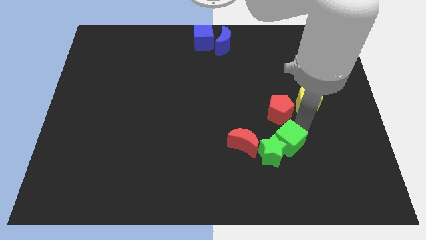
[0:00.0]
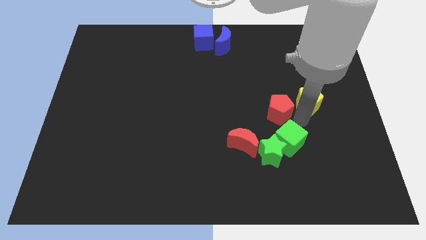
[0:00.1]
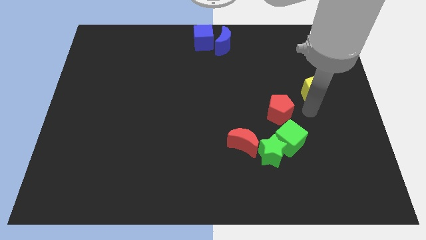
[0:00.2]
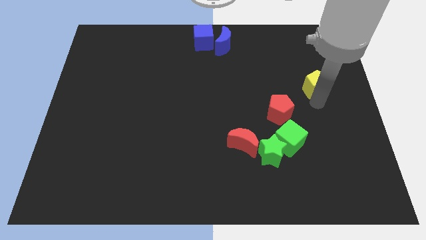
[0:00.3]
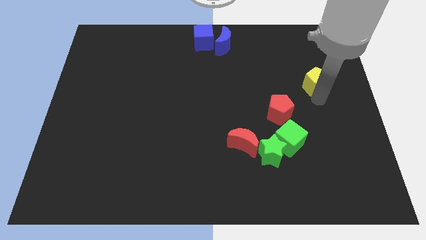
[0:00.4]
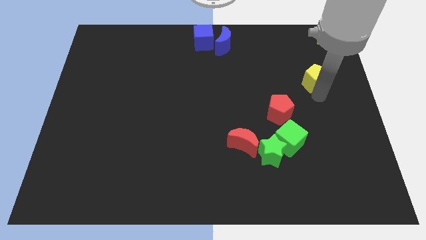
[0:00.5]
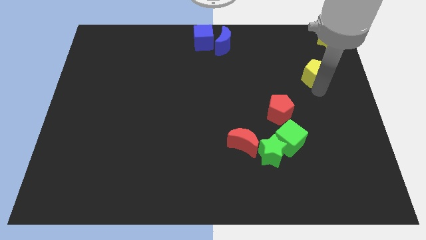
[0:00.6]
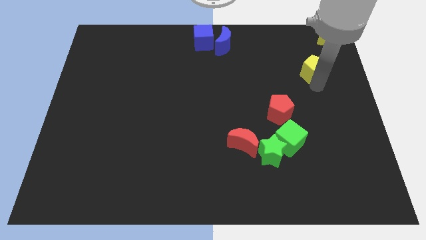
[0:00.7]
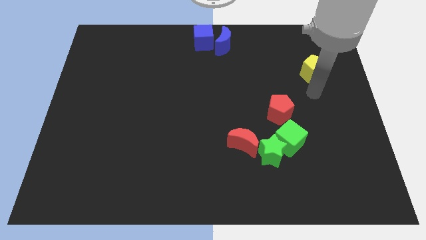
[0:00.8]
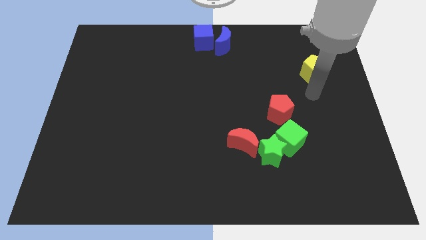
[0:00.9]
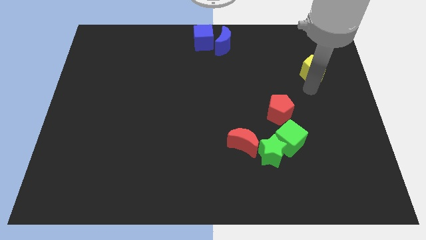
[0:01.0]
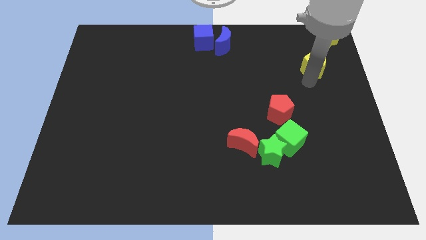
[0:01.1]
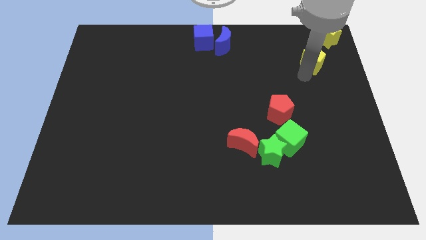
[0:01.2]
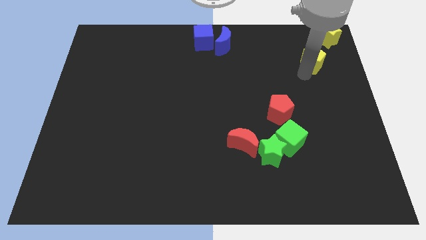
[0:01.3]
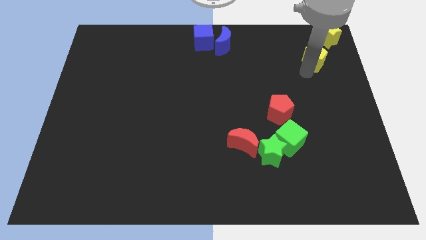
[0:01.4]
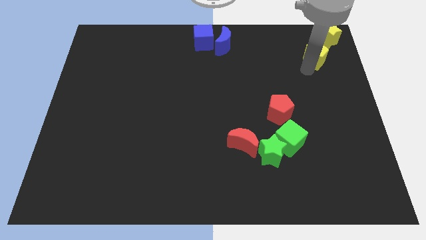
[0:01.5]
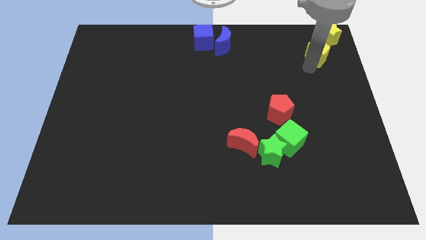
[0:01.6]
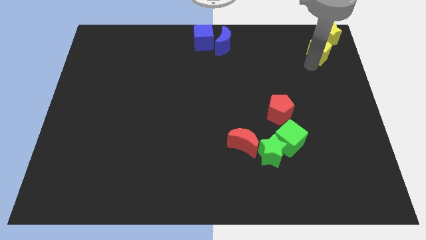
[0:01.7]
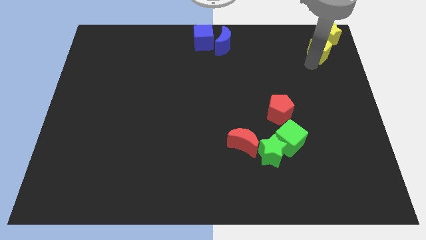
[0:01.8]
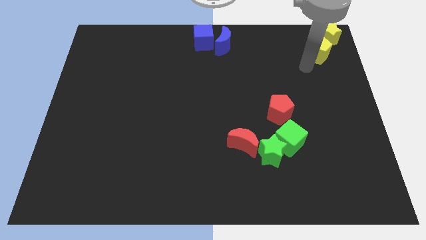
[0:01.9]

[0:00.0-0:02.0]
move the yellow pentagon below into the yellow star

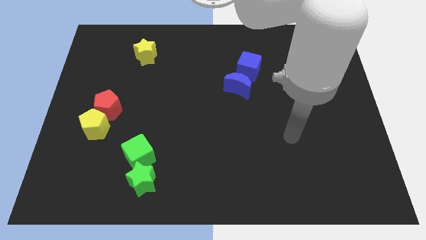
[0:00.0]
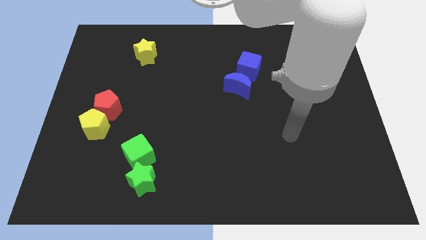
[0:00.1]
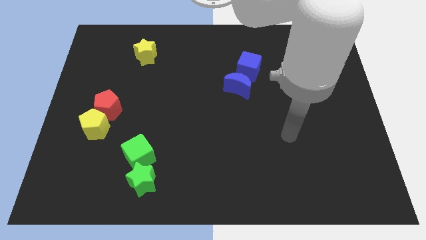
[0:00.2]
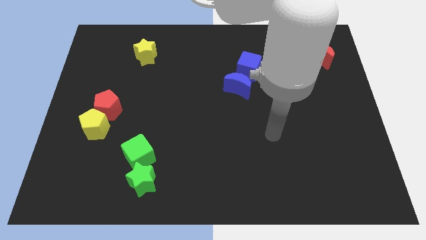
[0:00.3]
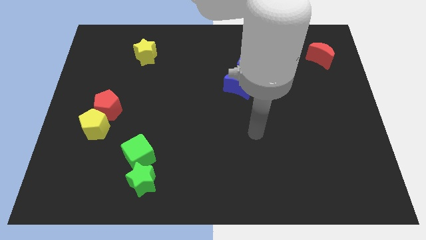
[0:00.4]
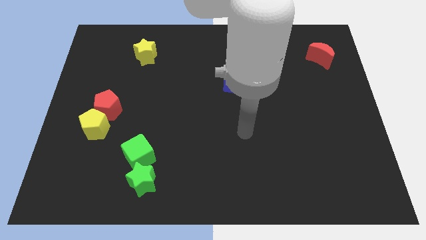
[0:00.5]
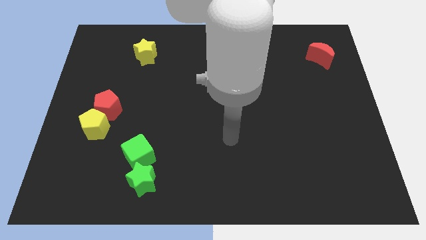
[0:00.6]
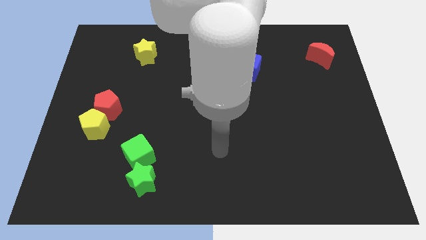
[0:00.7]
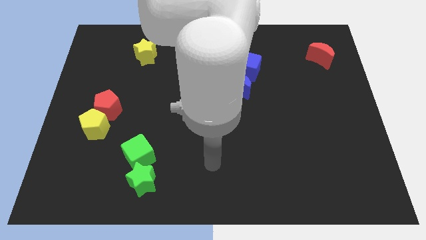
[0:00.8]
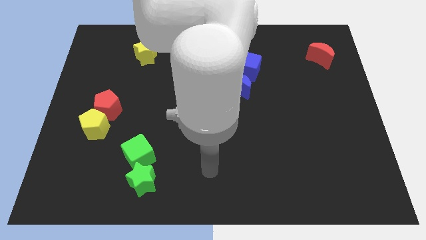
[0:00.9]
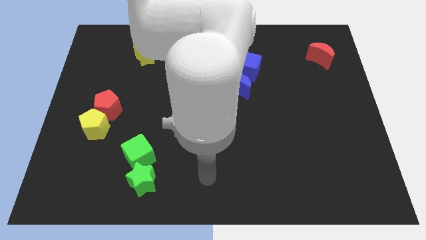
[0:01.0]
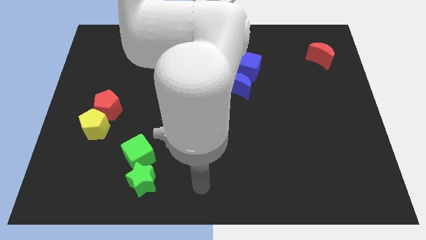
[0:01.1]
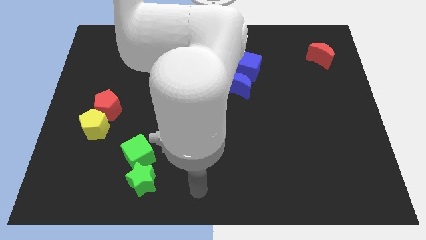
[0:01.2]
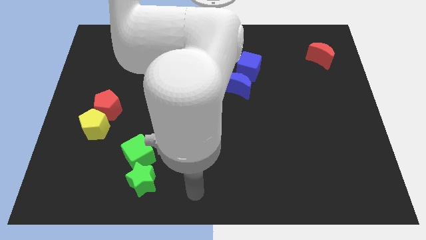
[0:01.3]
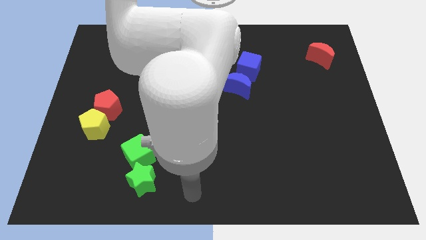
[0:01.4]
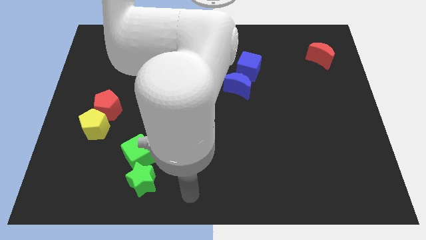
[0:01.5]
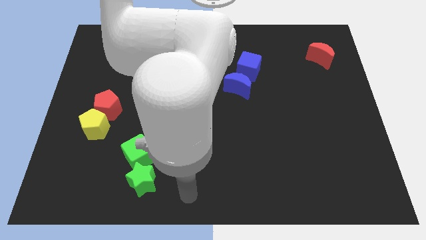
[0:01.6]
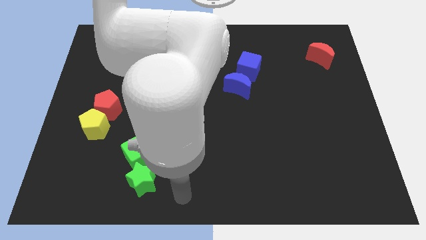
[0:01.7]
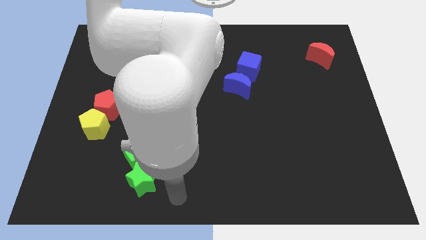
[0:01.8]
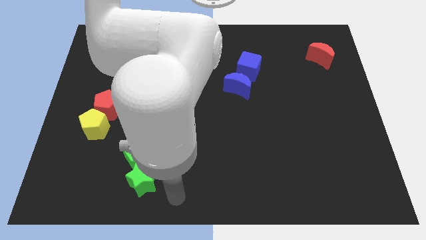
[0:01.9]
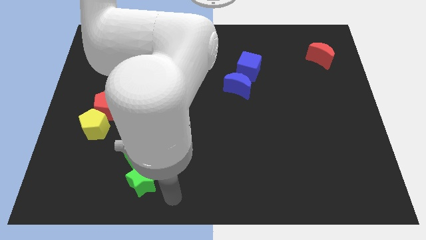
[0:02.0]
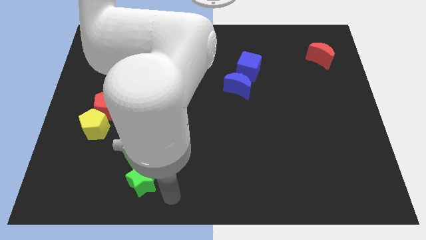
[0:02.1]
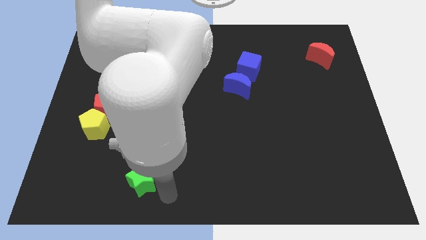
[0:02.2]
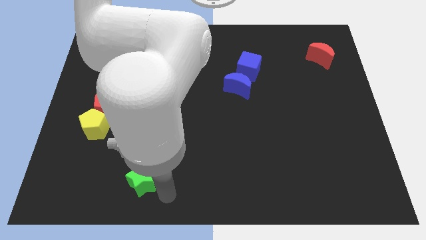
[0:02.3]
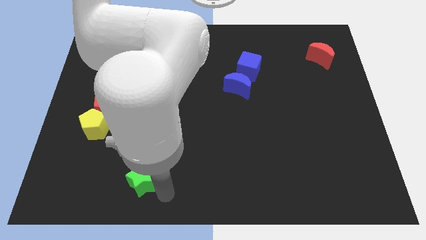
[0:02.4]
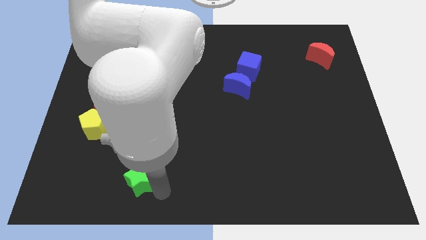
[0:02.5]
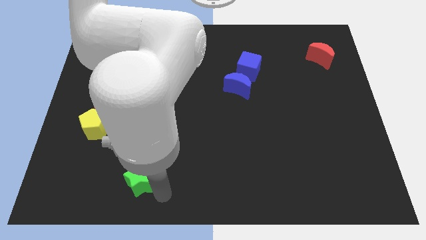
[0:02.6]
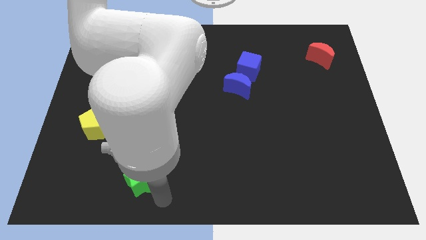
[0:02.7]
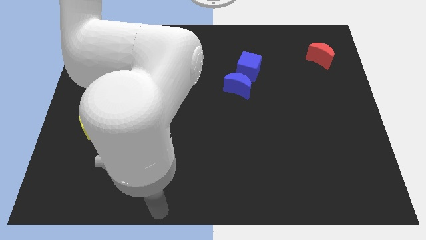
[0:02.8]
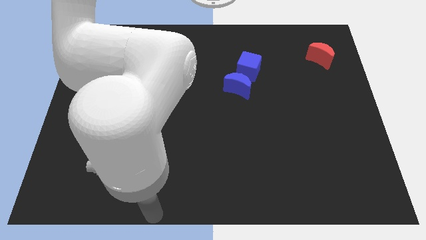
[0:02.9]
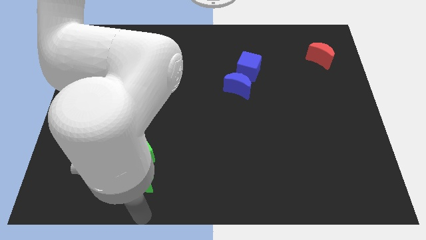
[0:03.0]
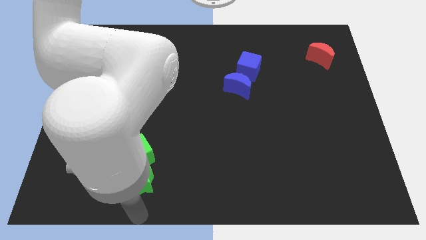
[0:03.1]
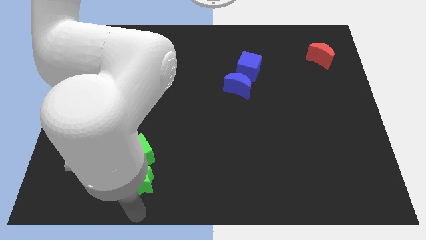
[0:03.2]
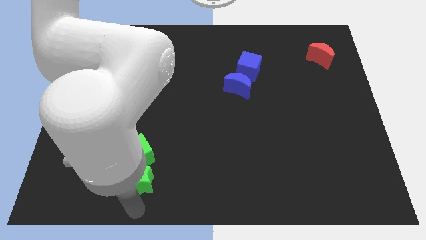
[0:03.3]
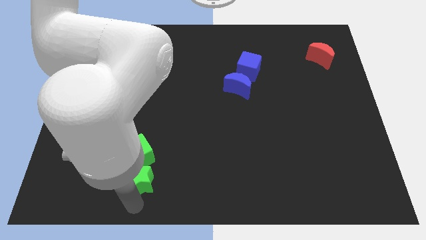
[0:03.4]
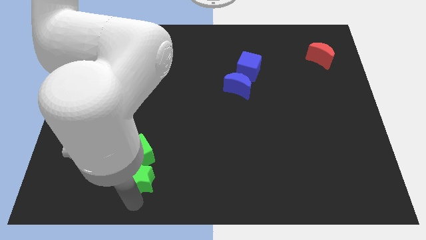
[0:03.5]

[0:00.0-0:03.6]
push the green star slightly to the left

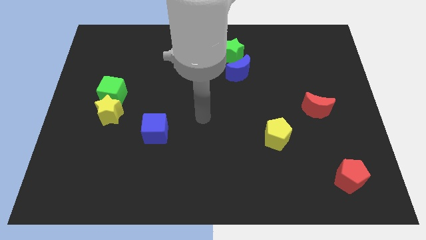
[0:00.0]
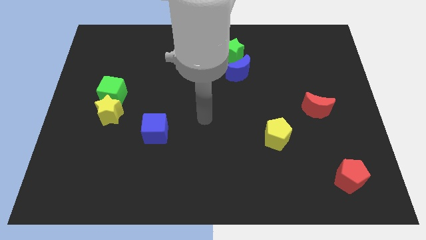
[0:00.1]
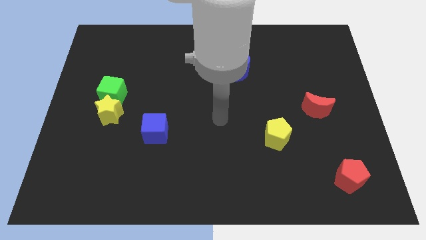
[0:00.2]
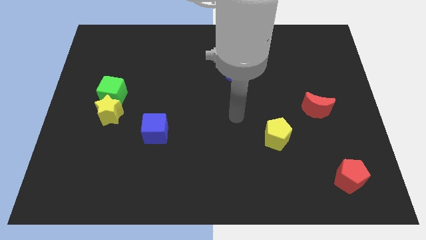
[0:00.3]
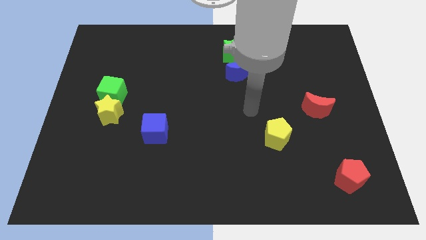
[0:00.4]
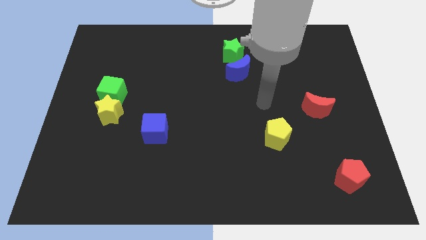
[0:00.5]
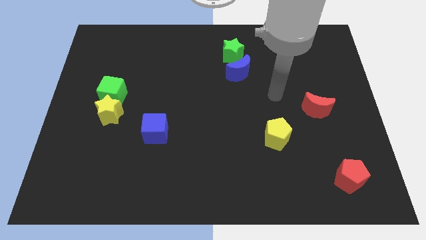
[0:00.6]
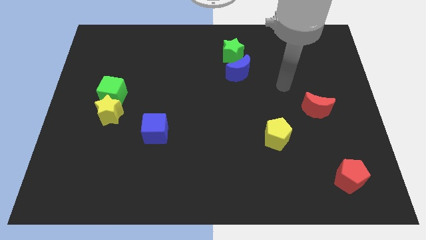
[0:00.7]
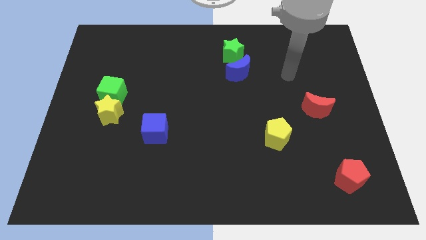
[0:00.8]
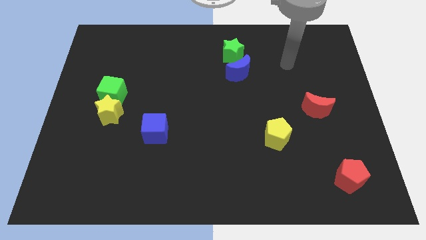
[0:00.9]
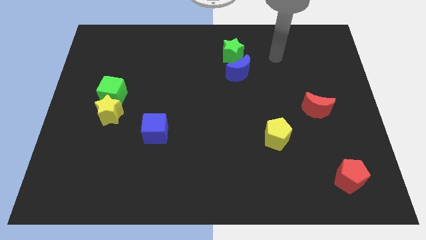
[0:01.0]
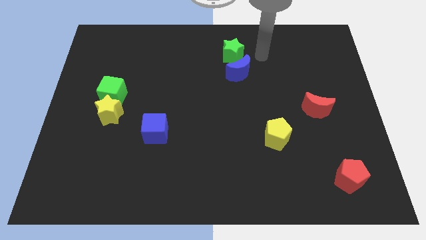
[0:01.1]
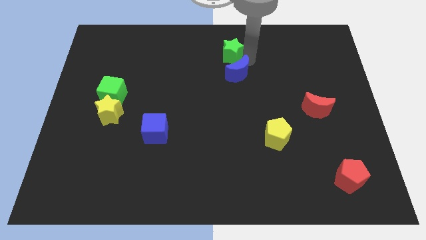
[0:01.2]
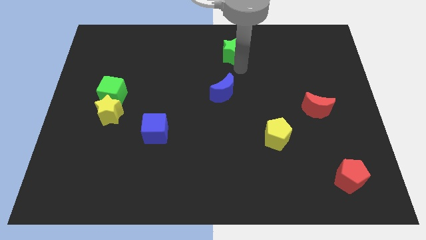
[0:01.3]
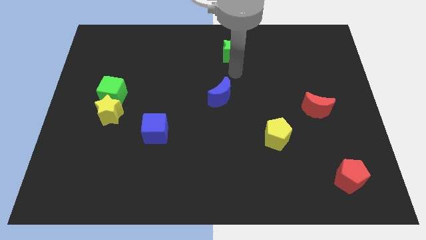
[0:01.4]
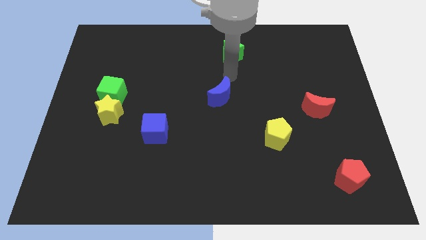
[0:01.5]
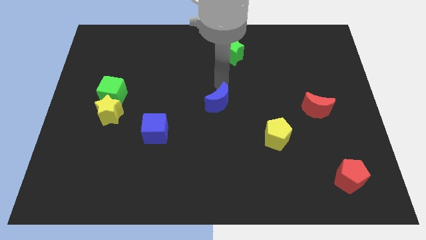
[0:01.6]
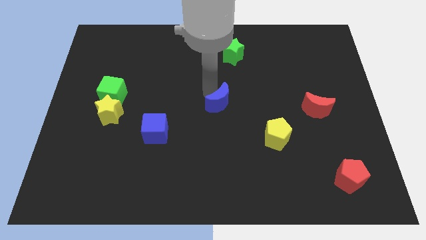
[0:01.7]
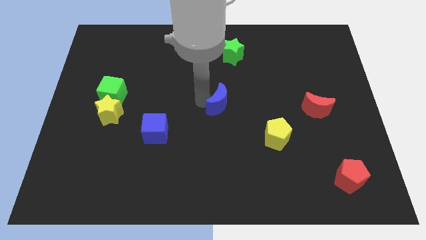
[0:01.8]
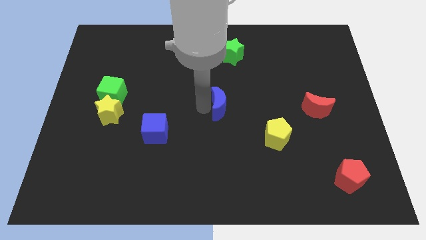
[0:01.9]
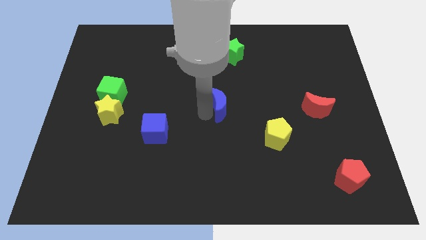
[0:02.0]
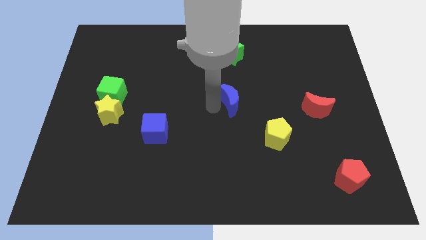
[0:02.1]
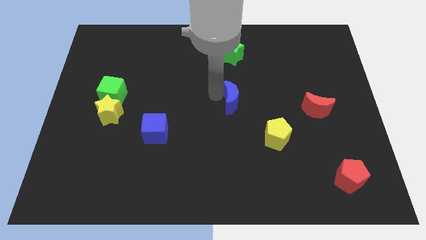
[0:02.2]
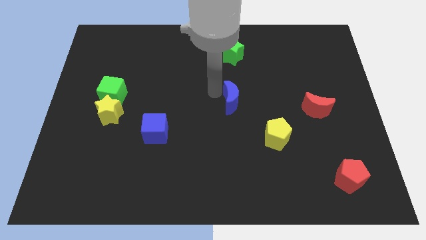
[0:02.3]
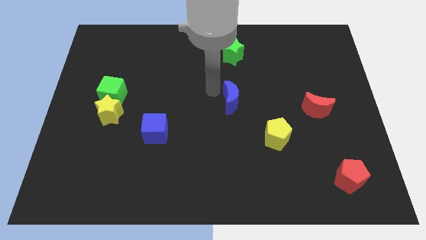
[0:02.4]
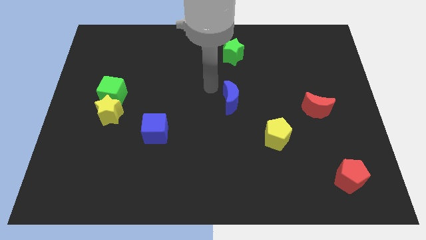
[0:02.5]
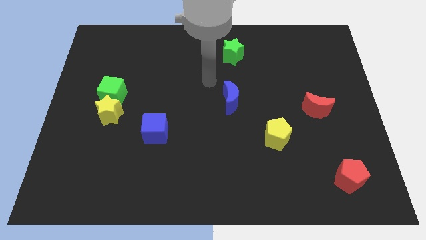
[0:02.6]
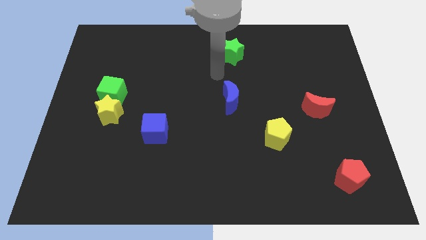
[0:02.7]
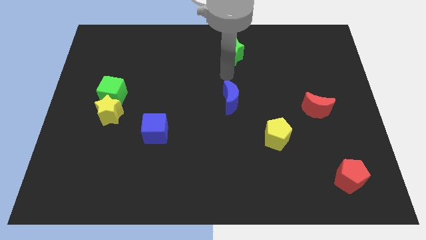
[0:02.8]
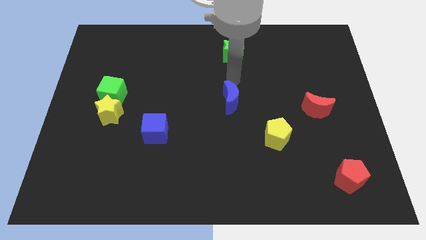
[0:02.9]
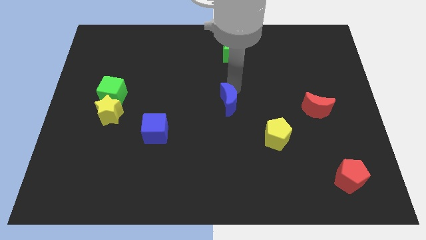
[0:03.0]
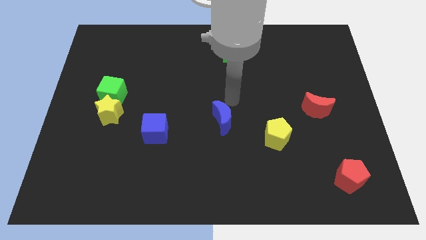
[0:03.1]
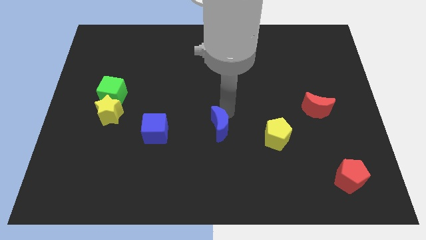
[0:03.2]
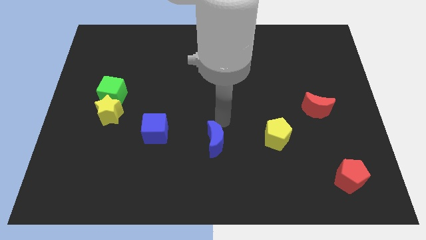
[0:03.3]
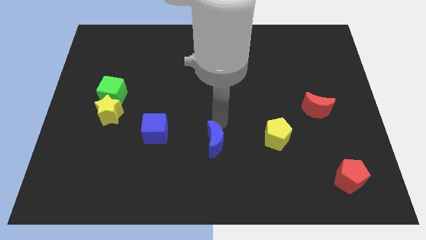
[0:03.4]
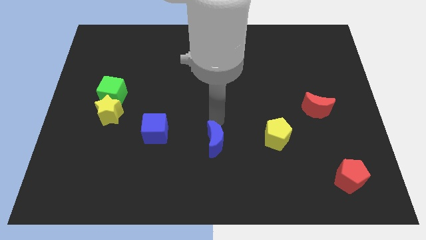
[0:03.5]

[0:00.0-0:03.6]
push the blue crescent to the right of the blue cube

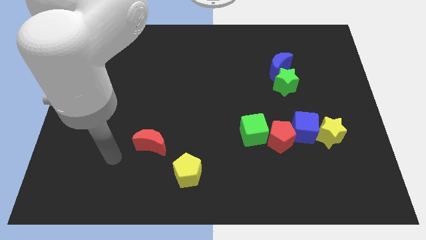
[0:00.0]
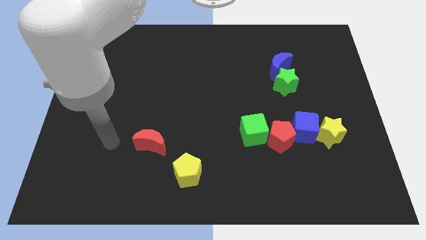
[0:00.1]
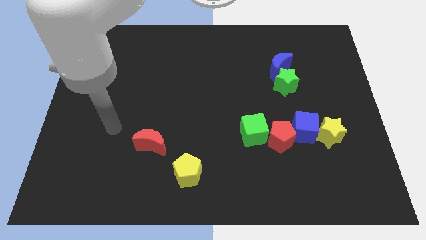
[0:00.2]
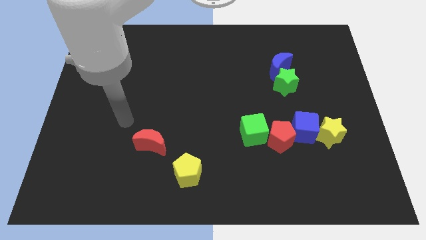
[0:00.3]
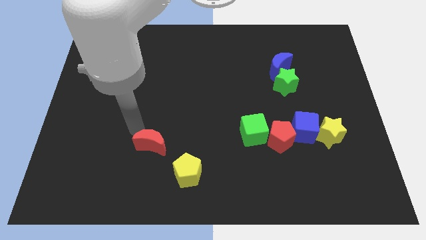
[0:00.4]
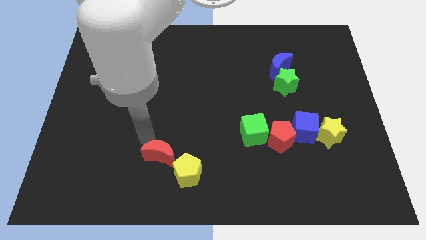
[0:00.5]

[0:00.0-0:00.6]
place the arm above the red moon
